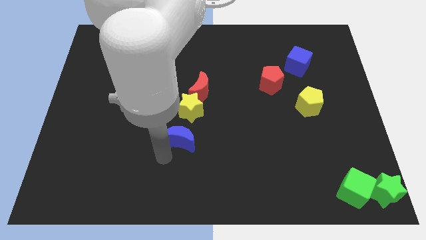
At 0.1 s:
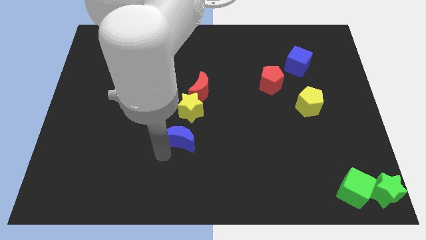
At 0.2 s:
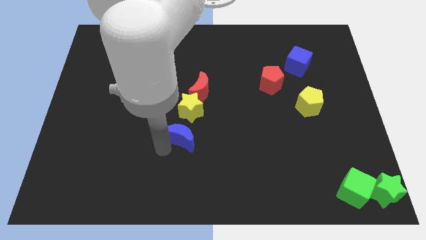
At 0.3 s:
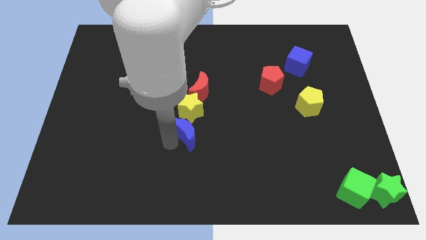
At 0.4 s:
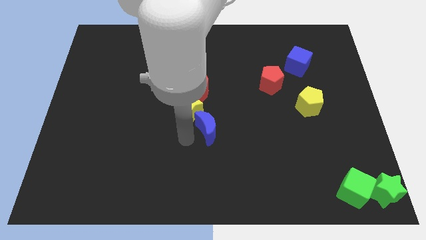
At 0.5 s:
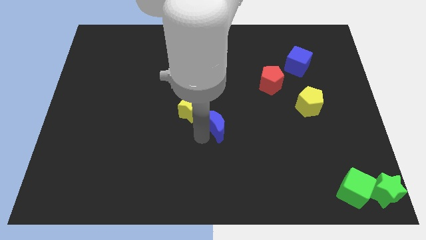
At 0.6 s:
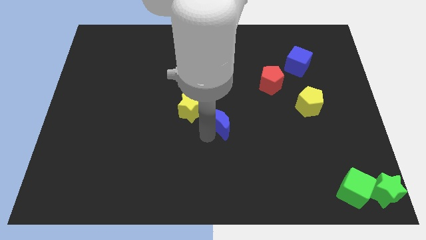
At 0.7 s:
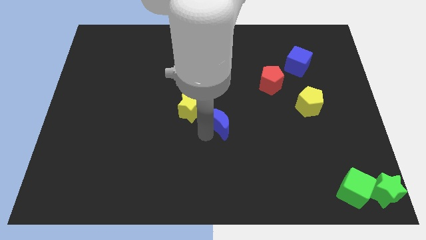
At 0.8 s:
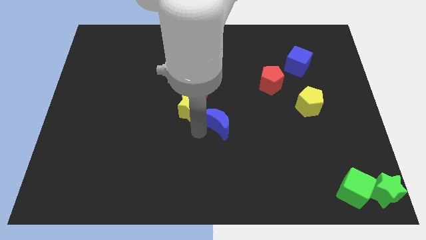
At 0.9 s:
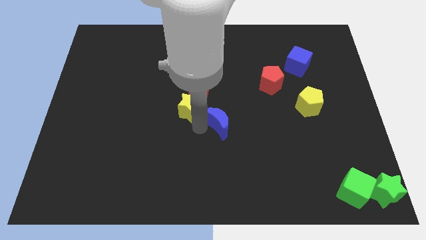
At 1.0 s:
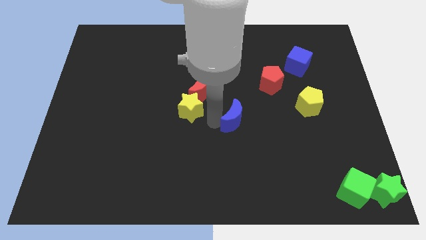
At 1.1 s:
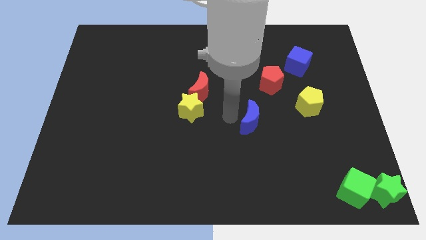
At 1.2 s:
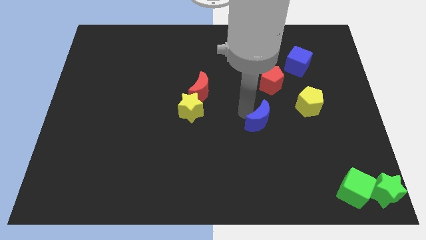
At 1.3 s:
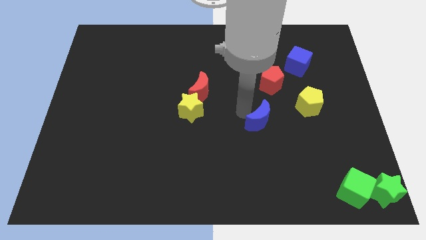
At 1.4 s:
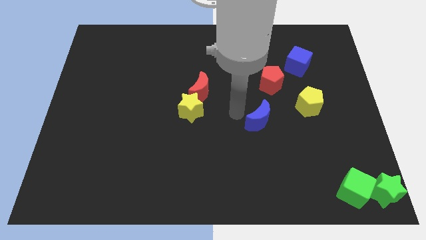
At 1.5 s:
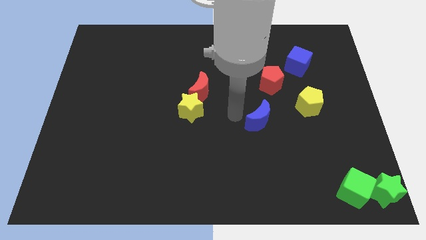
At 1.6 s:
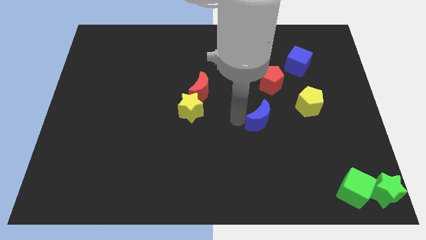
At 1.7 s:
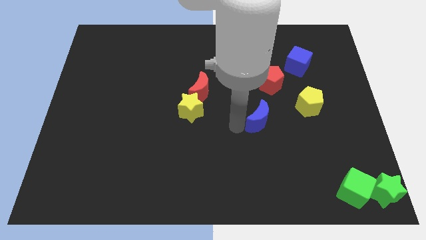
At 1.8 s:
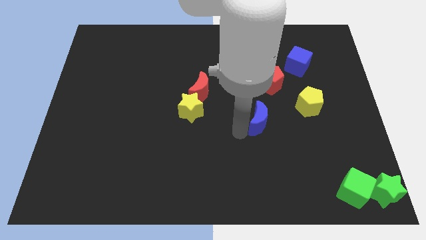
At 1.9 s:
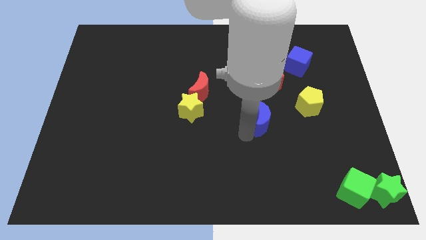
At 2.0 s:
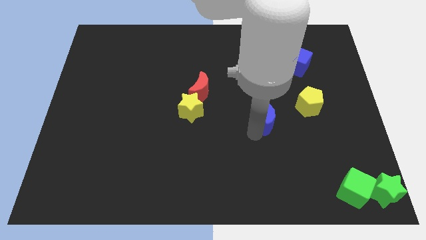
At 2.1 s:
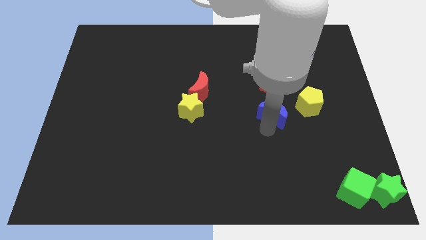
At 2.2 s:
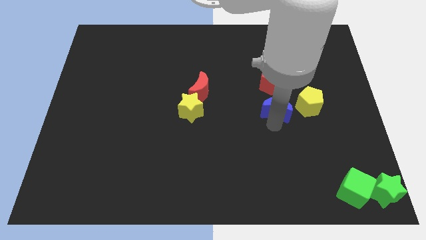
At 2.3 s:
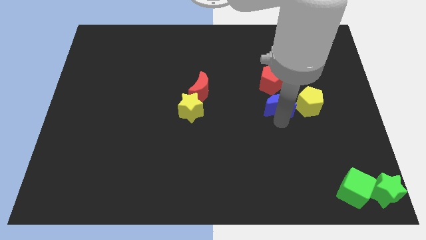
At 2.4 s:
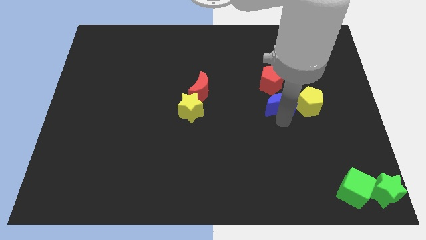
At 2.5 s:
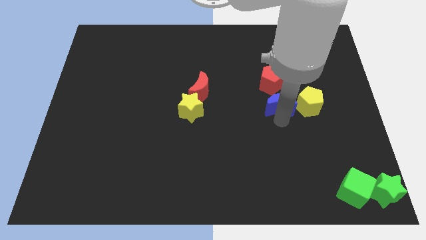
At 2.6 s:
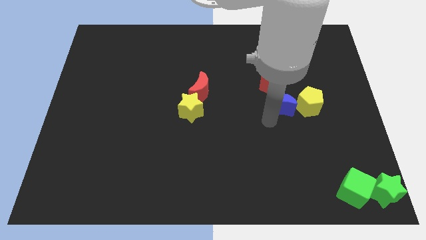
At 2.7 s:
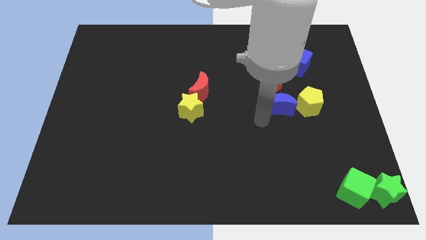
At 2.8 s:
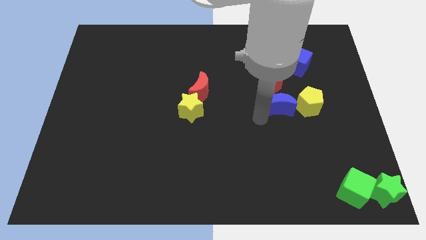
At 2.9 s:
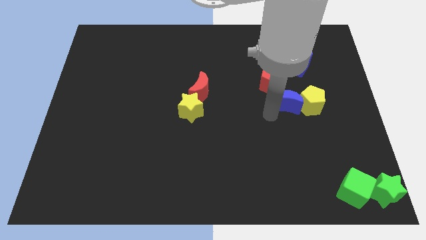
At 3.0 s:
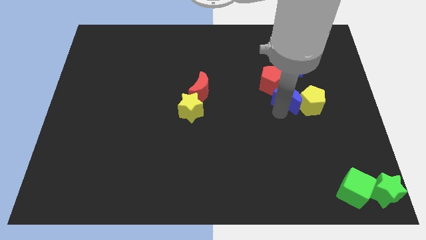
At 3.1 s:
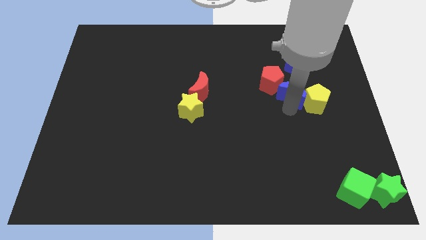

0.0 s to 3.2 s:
push the blue crescent into the yellow pentagon from the left

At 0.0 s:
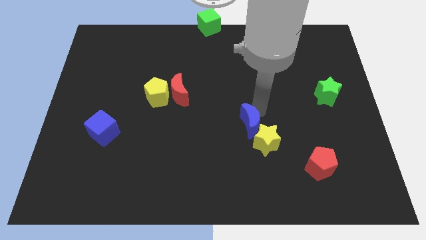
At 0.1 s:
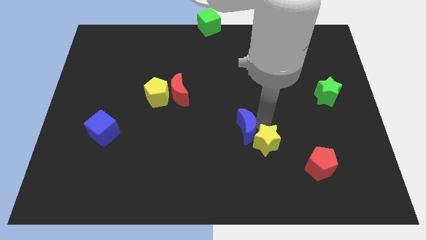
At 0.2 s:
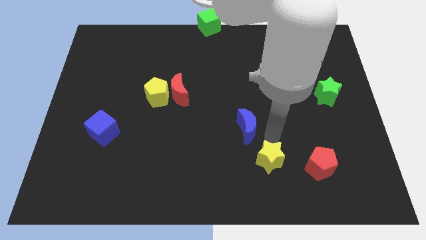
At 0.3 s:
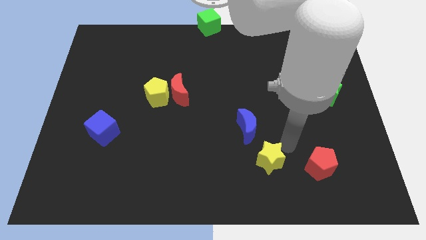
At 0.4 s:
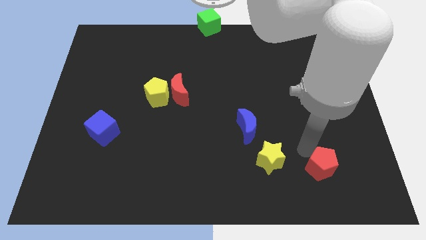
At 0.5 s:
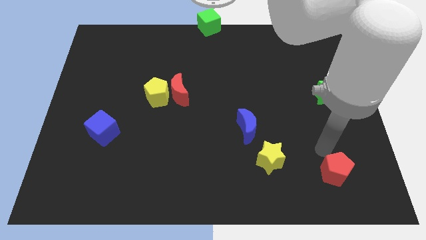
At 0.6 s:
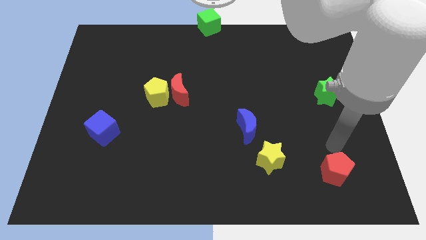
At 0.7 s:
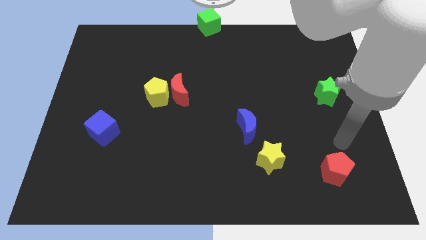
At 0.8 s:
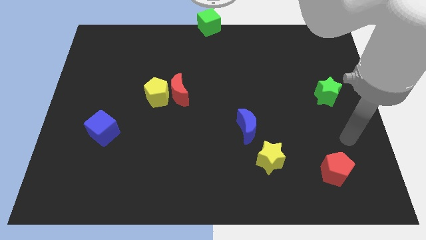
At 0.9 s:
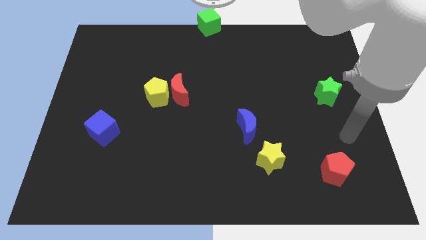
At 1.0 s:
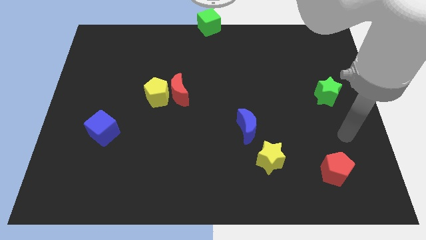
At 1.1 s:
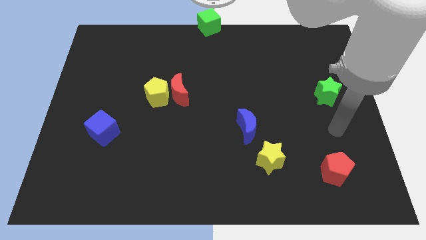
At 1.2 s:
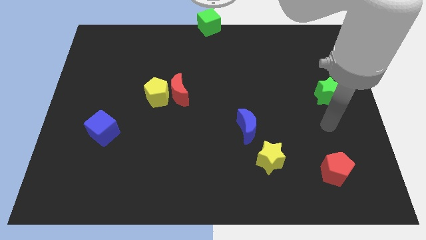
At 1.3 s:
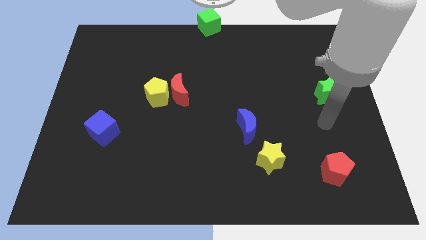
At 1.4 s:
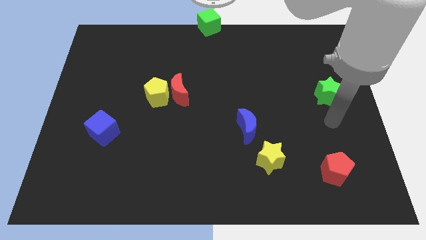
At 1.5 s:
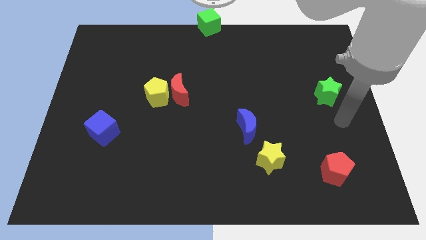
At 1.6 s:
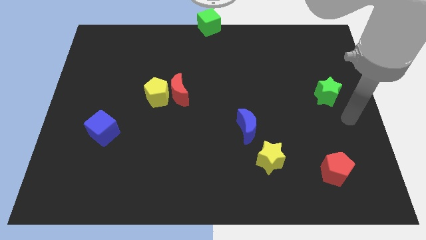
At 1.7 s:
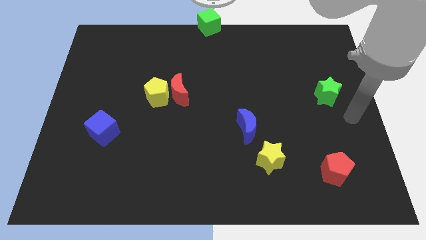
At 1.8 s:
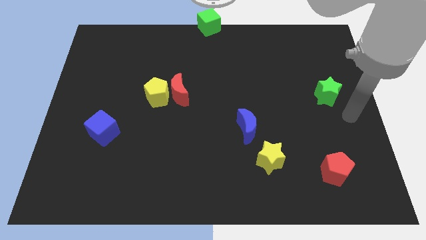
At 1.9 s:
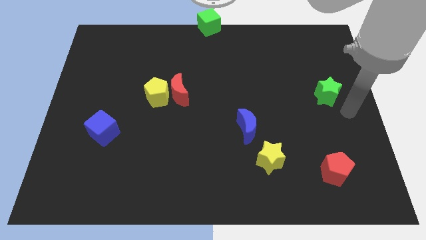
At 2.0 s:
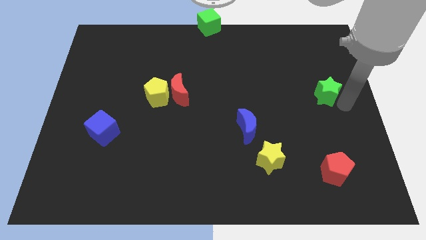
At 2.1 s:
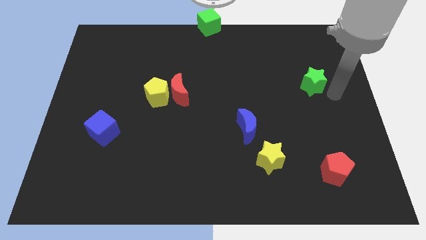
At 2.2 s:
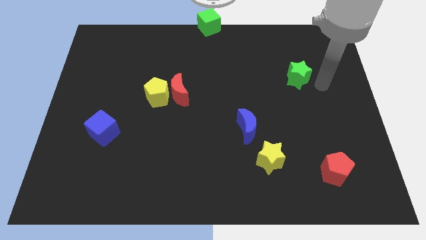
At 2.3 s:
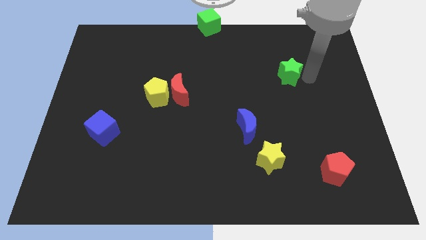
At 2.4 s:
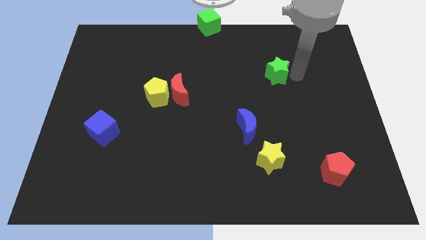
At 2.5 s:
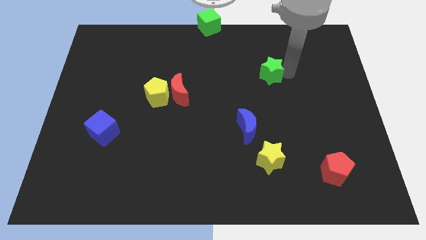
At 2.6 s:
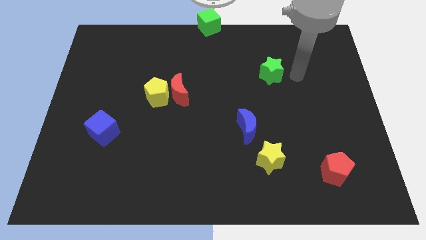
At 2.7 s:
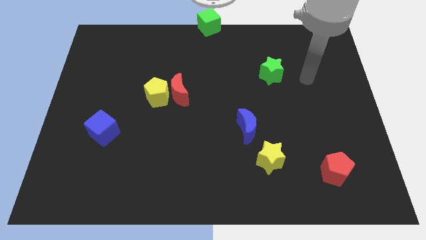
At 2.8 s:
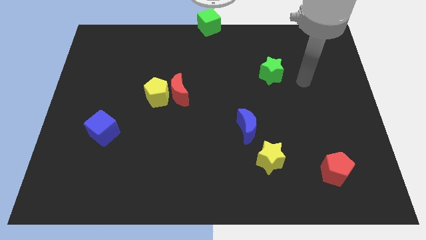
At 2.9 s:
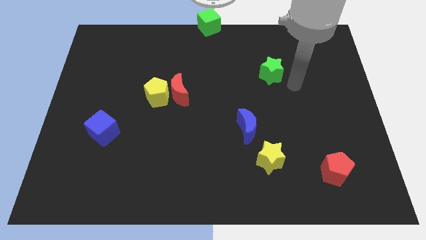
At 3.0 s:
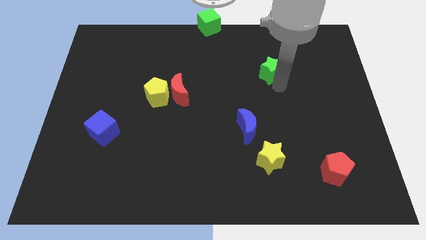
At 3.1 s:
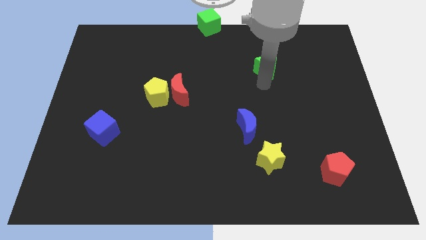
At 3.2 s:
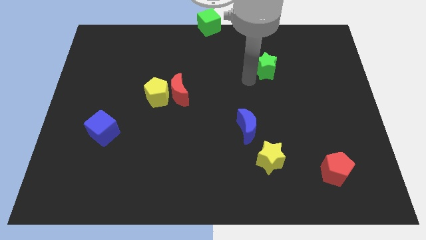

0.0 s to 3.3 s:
place the green star vertically above the yellow star

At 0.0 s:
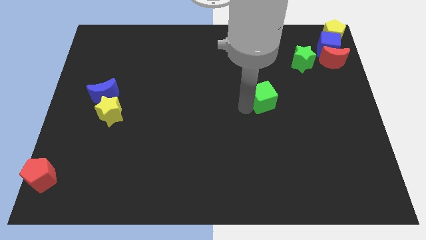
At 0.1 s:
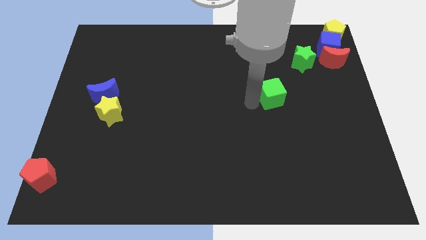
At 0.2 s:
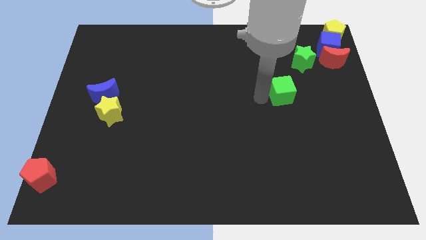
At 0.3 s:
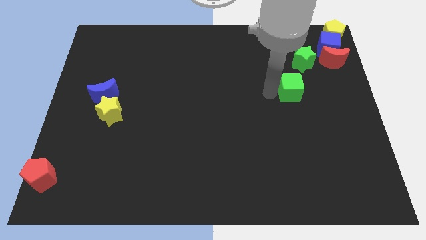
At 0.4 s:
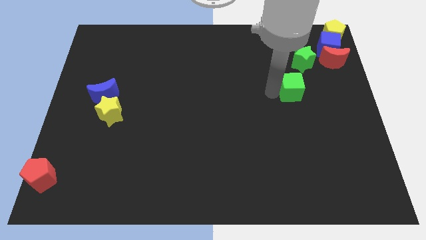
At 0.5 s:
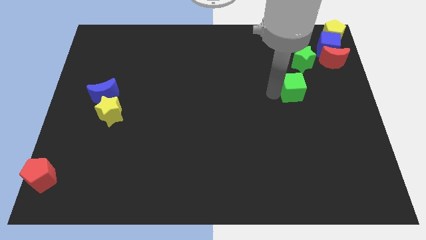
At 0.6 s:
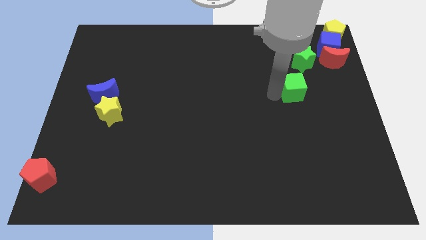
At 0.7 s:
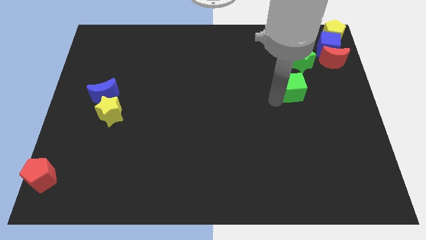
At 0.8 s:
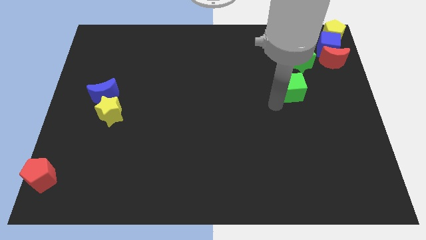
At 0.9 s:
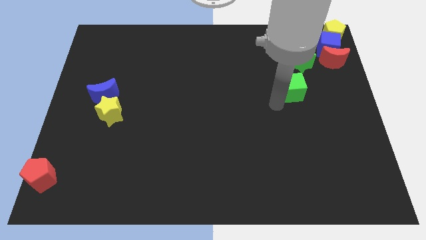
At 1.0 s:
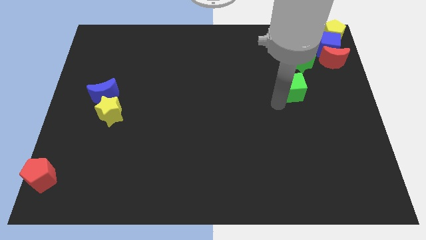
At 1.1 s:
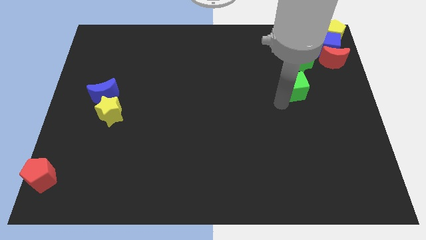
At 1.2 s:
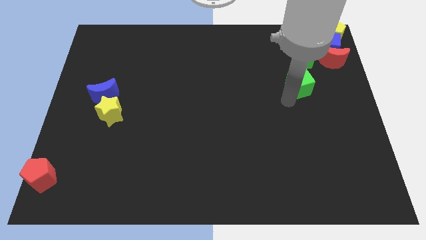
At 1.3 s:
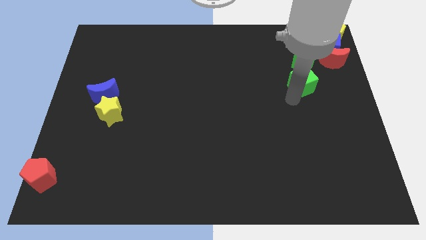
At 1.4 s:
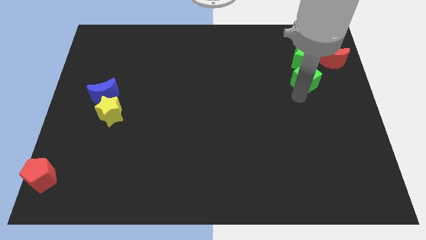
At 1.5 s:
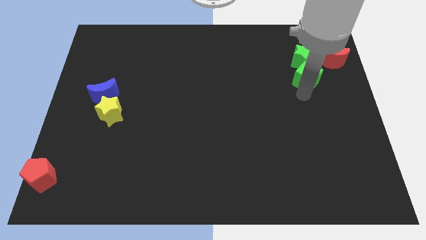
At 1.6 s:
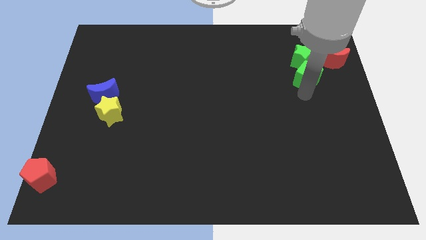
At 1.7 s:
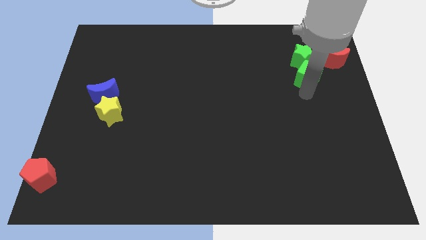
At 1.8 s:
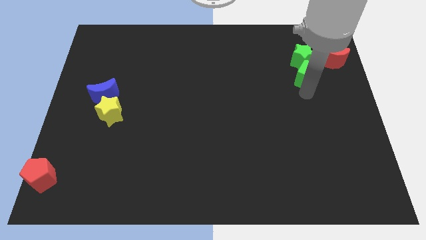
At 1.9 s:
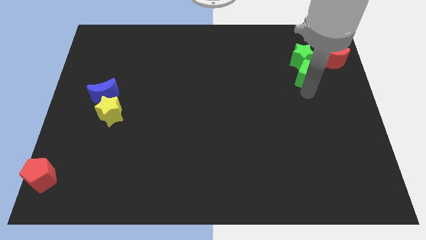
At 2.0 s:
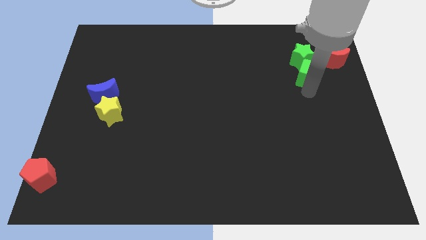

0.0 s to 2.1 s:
slide green cube into green star

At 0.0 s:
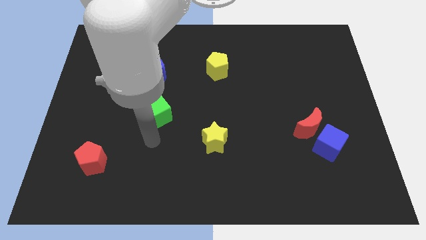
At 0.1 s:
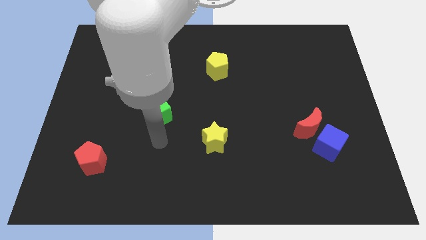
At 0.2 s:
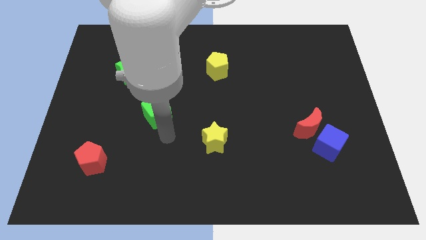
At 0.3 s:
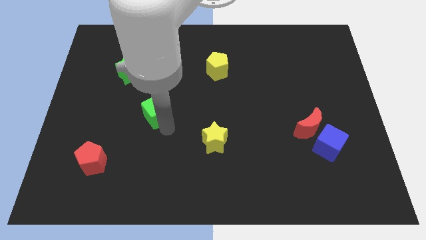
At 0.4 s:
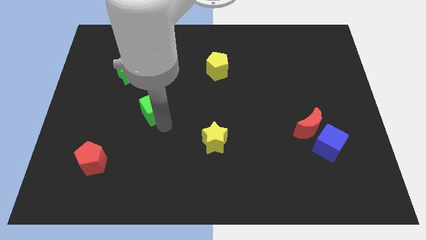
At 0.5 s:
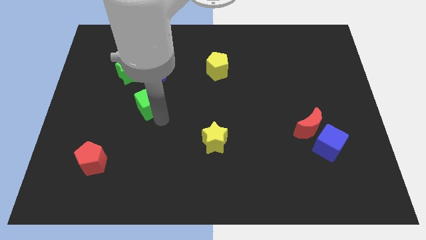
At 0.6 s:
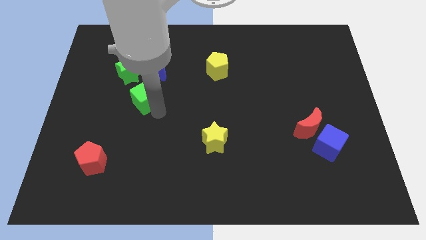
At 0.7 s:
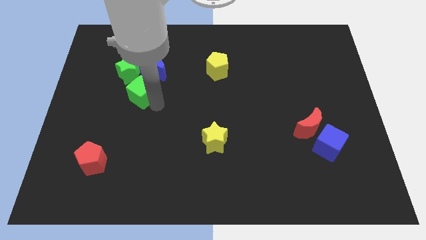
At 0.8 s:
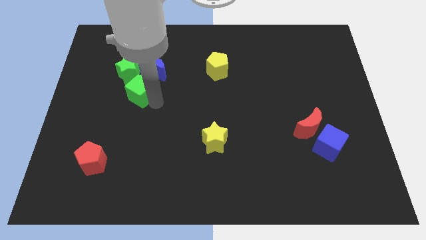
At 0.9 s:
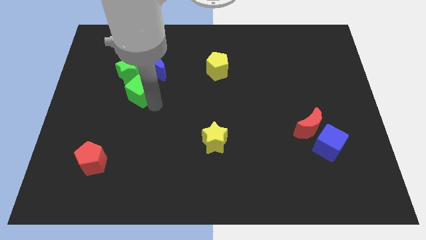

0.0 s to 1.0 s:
move the green cube diagonal to the green star
